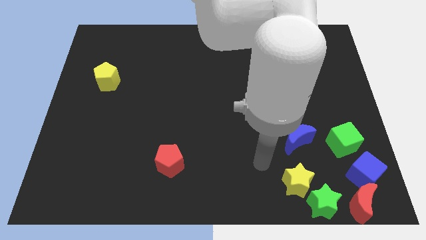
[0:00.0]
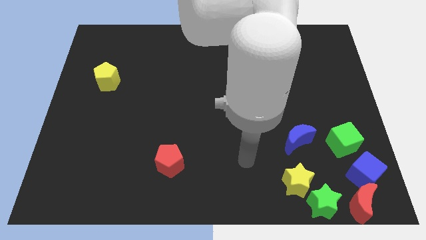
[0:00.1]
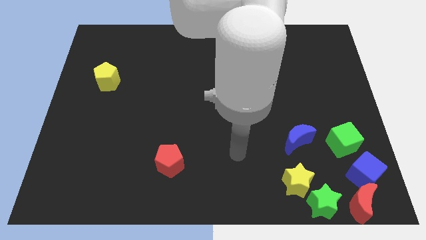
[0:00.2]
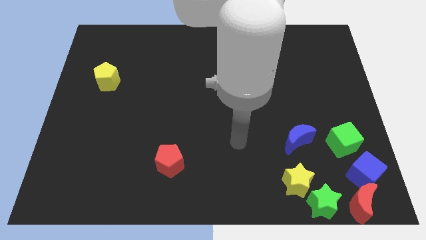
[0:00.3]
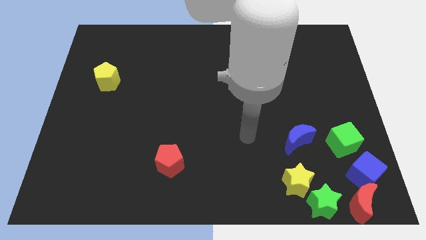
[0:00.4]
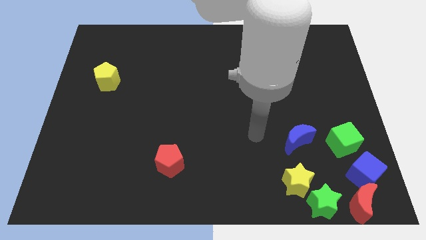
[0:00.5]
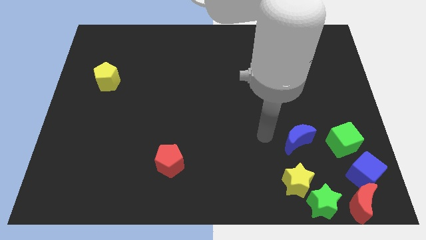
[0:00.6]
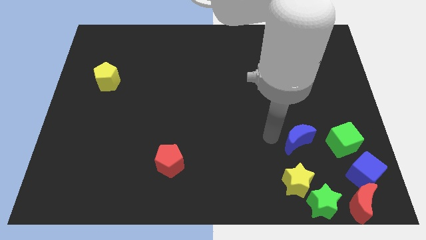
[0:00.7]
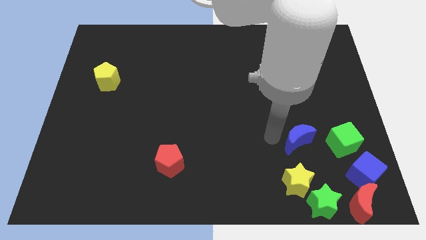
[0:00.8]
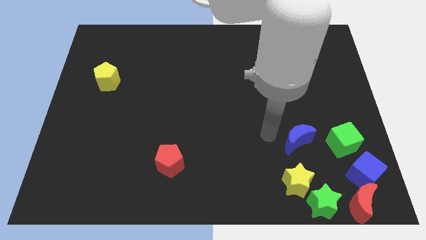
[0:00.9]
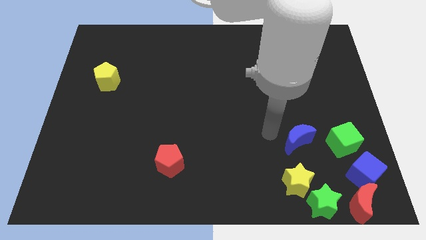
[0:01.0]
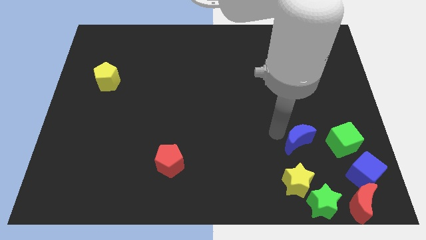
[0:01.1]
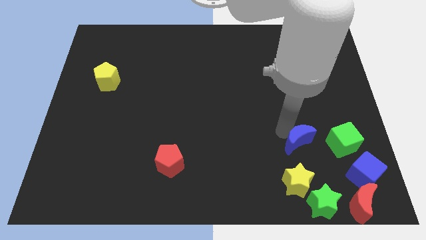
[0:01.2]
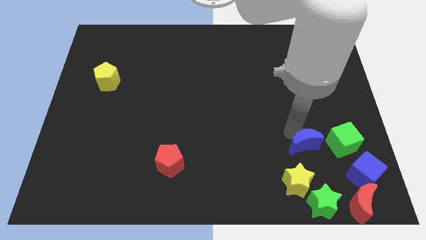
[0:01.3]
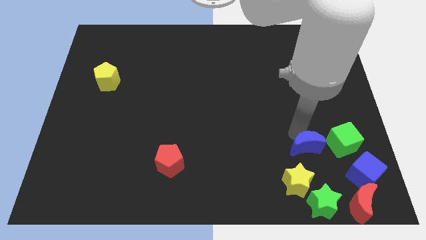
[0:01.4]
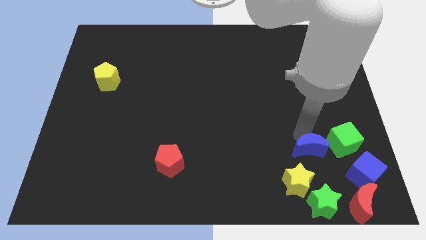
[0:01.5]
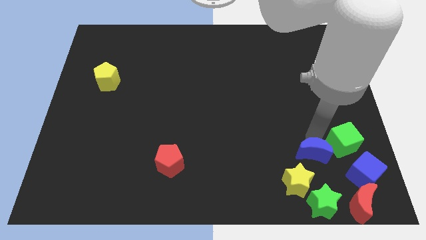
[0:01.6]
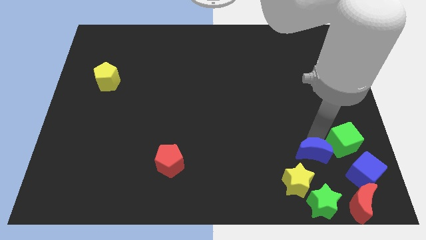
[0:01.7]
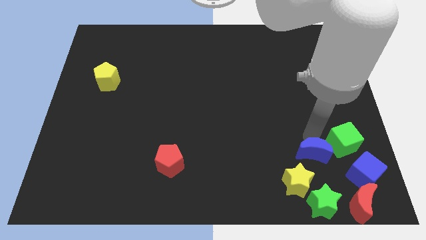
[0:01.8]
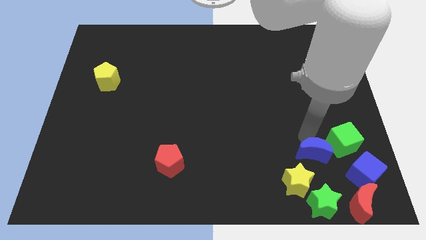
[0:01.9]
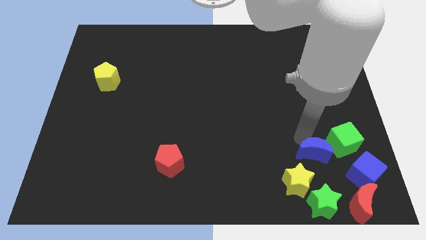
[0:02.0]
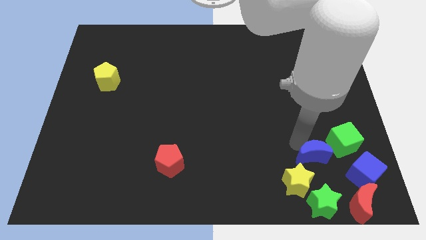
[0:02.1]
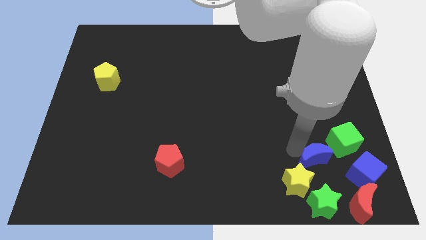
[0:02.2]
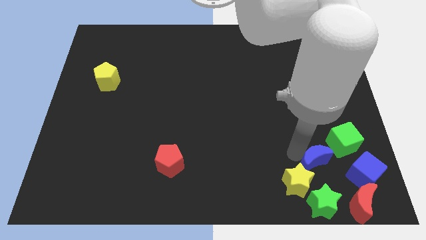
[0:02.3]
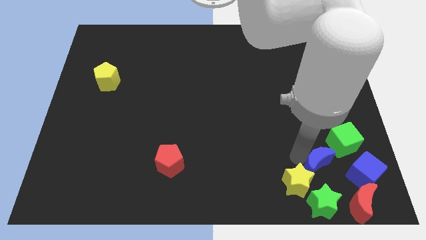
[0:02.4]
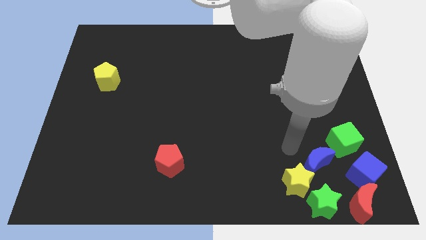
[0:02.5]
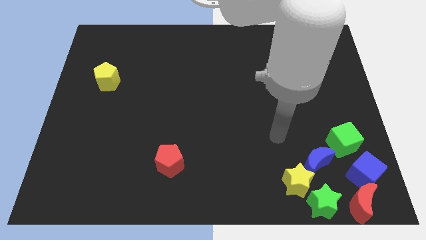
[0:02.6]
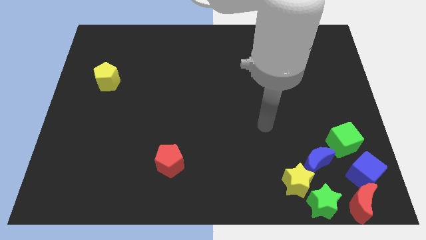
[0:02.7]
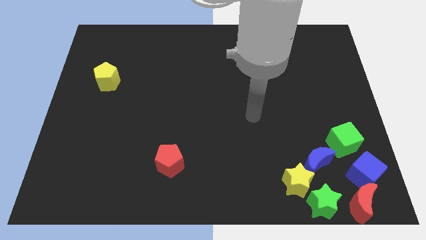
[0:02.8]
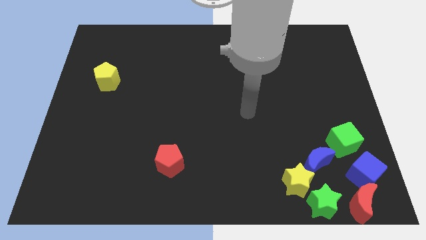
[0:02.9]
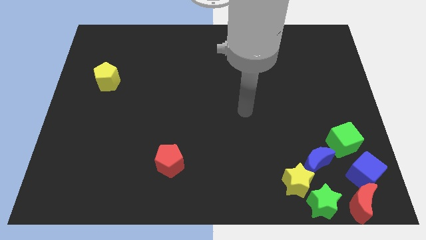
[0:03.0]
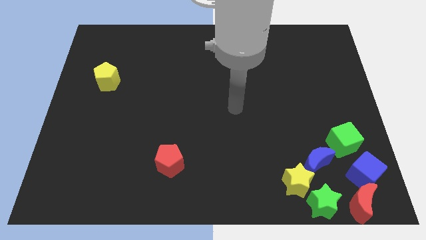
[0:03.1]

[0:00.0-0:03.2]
place the blue crescent in between the yellow star and the green cube

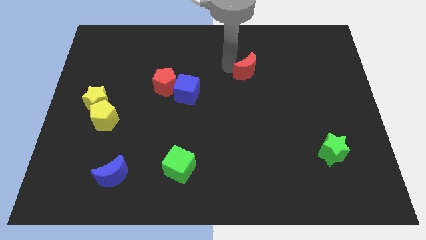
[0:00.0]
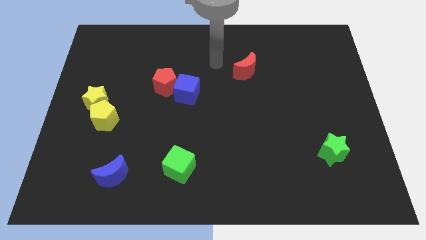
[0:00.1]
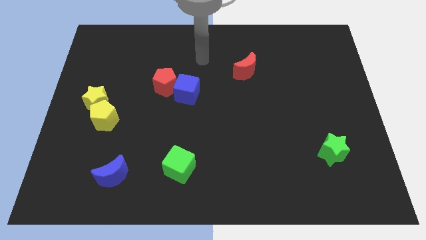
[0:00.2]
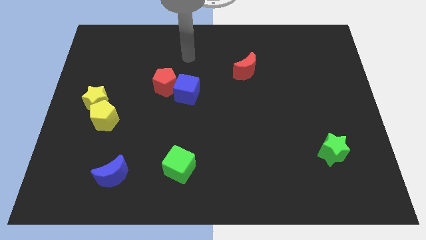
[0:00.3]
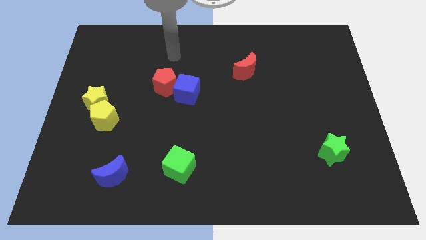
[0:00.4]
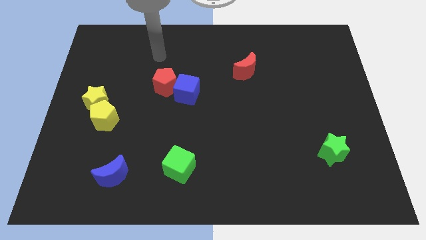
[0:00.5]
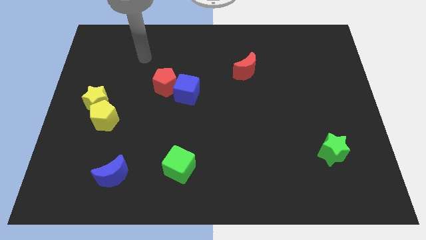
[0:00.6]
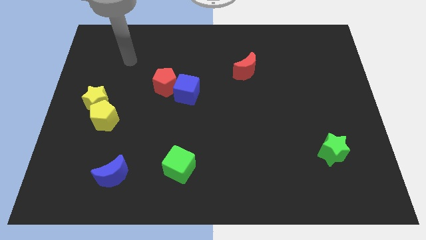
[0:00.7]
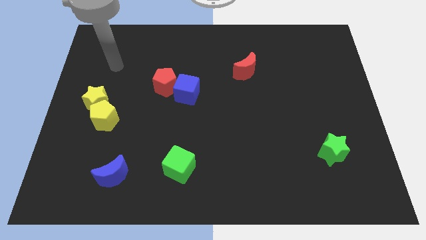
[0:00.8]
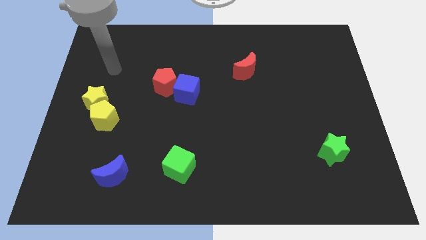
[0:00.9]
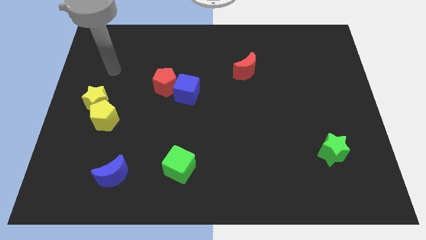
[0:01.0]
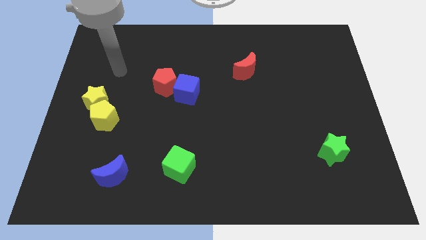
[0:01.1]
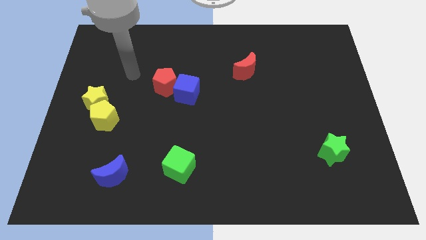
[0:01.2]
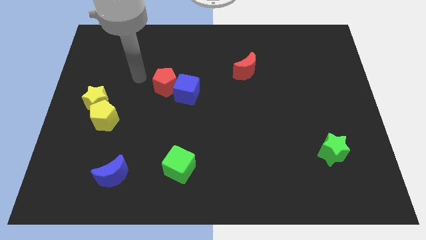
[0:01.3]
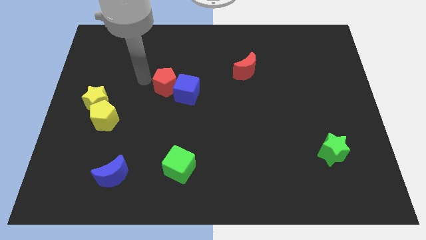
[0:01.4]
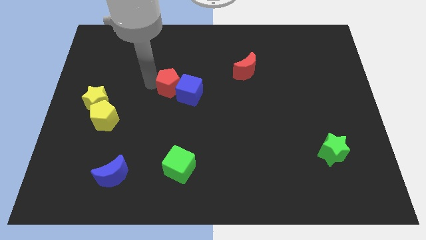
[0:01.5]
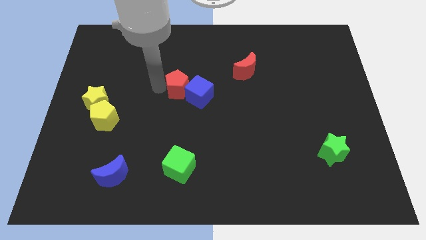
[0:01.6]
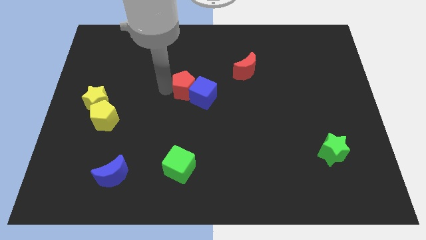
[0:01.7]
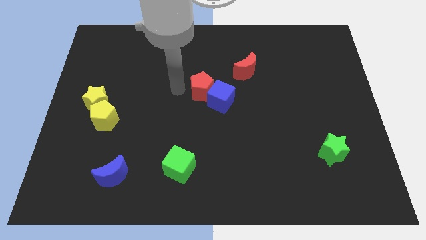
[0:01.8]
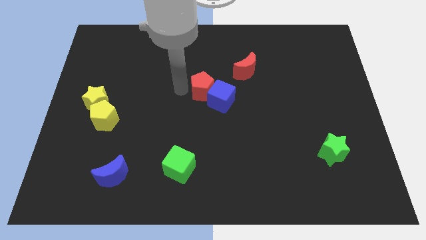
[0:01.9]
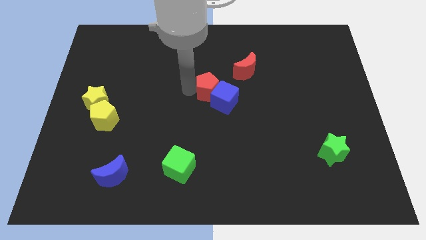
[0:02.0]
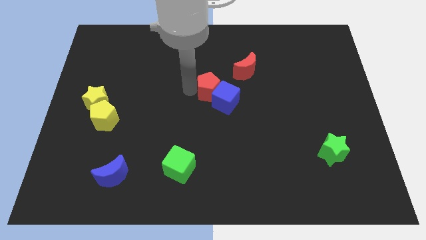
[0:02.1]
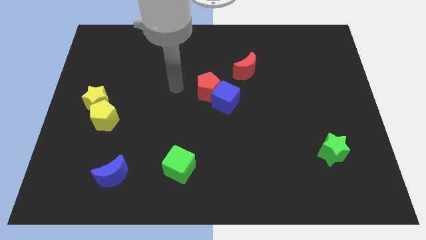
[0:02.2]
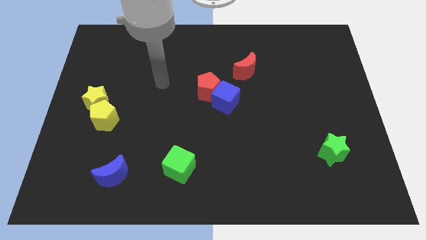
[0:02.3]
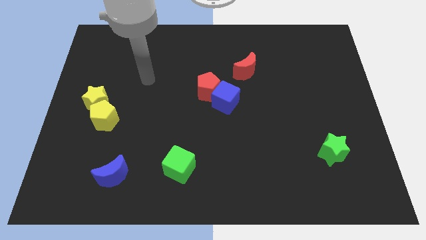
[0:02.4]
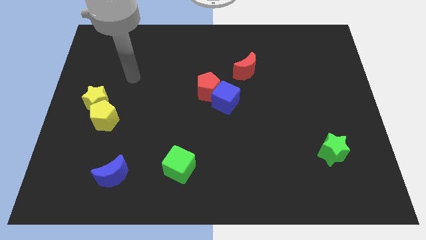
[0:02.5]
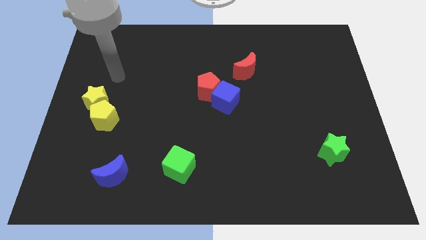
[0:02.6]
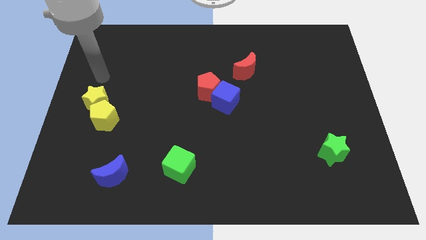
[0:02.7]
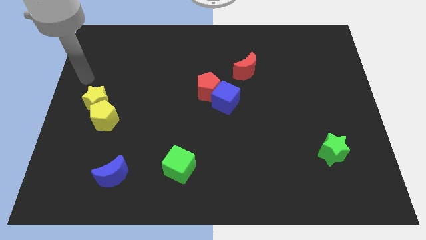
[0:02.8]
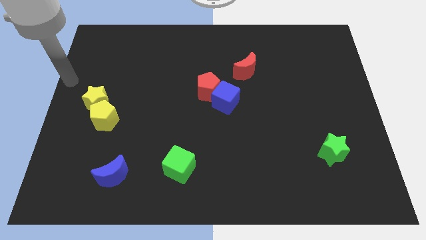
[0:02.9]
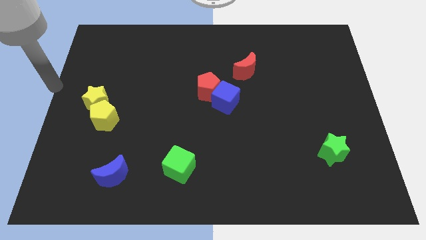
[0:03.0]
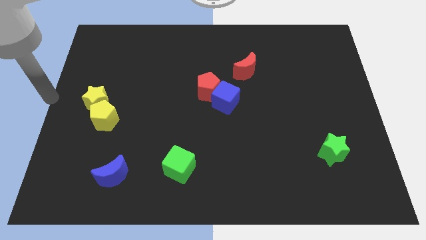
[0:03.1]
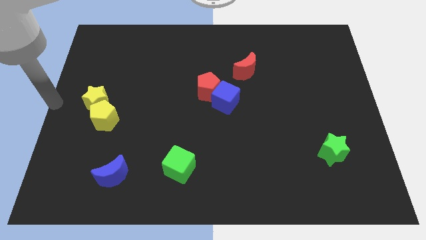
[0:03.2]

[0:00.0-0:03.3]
push the red pentagon along with blue cube towards the center of the board

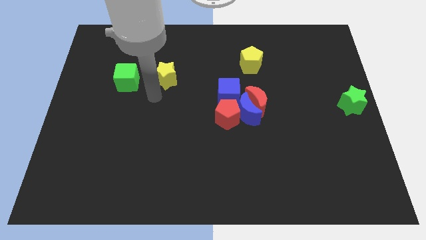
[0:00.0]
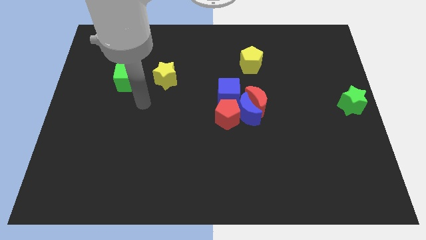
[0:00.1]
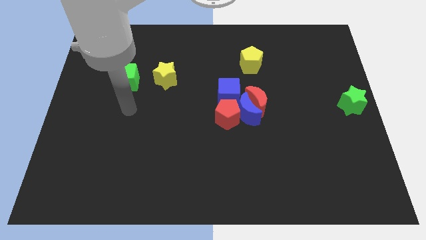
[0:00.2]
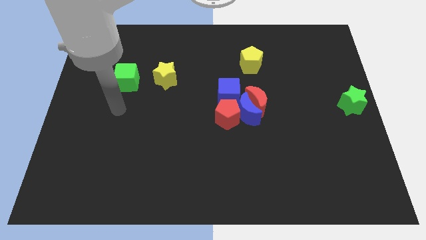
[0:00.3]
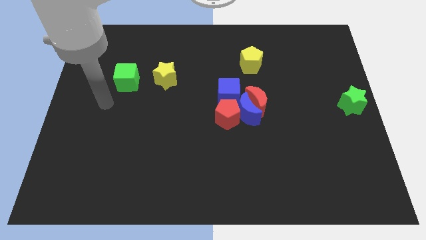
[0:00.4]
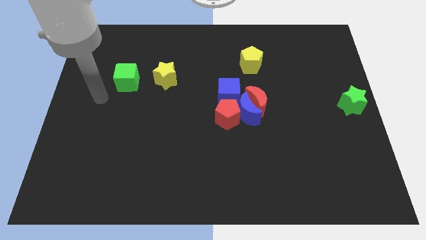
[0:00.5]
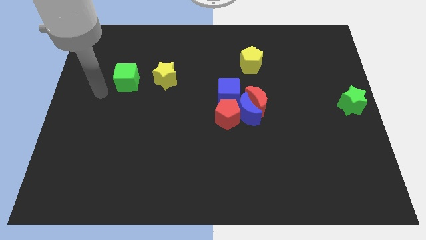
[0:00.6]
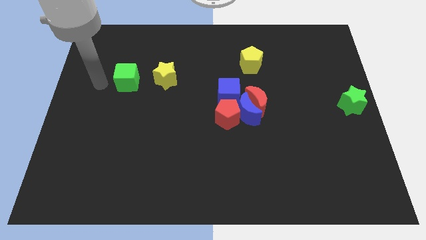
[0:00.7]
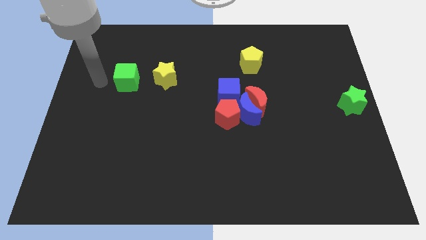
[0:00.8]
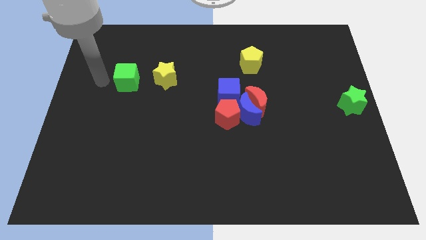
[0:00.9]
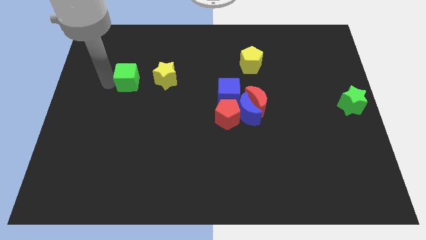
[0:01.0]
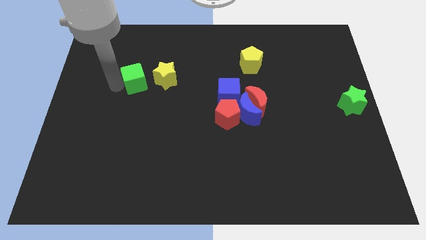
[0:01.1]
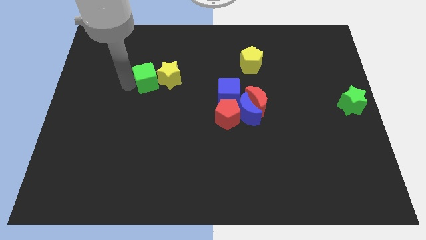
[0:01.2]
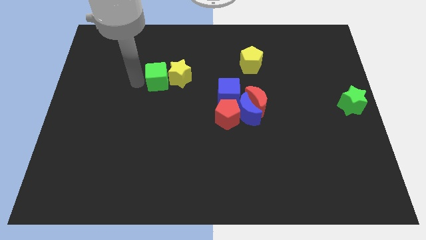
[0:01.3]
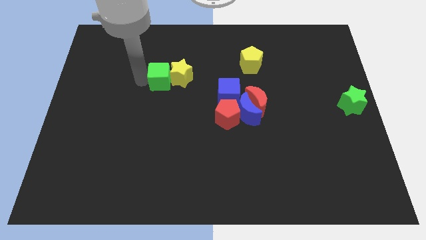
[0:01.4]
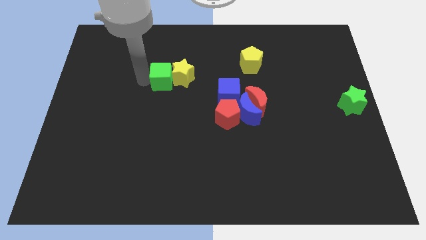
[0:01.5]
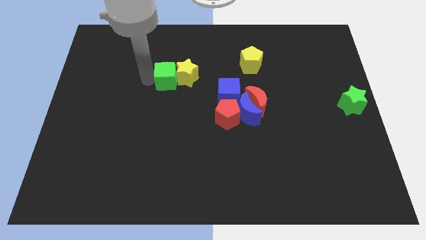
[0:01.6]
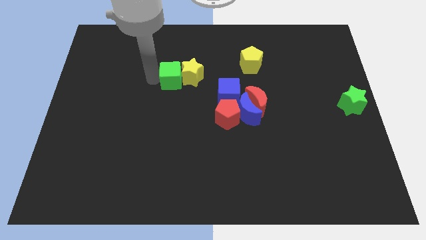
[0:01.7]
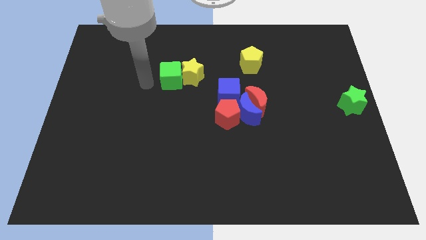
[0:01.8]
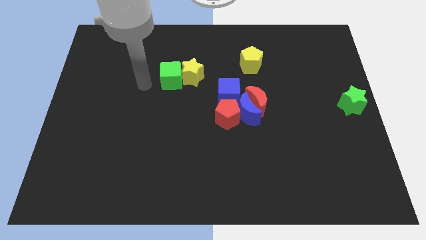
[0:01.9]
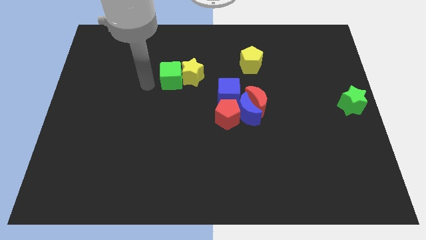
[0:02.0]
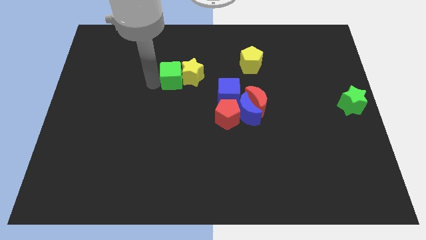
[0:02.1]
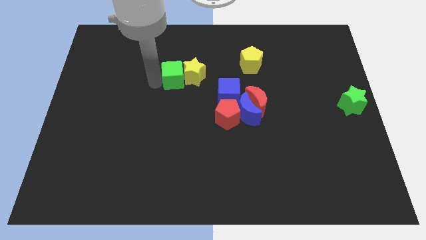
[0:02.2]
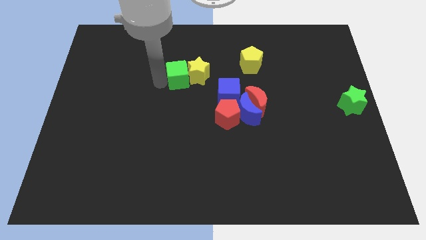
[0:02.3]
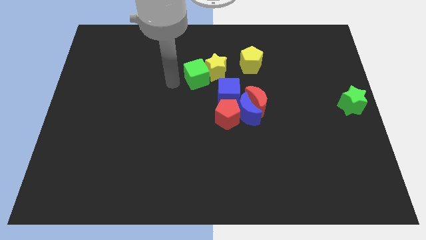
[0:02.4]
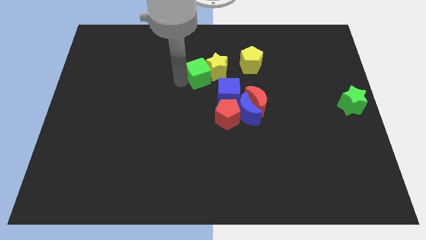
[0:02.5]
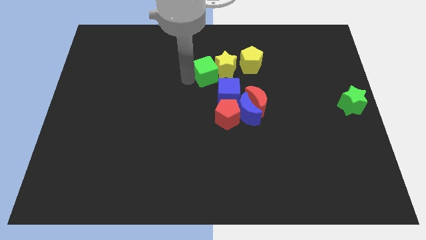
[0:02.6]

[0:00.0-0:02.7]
push the green cube and yellow star towards the yellow pentagon
